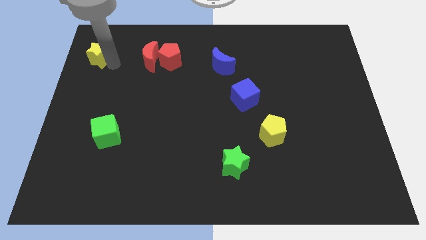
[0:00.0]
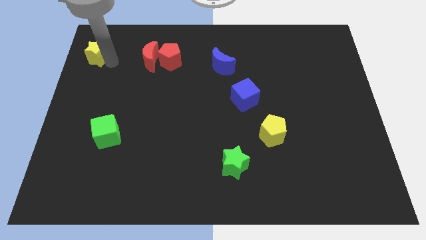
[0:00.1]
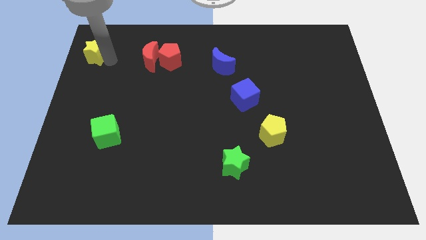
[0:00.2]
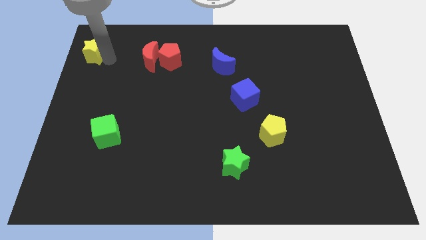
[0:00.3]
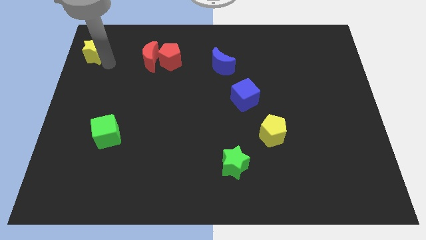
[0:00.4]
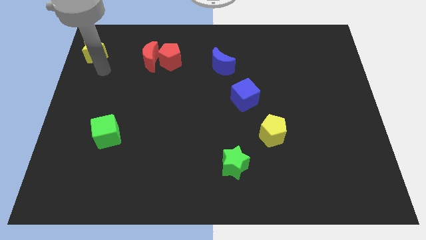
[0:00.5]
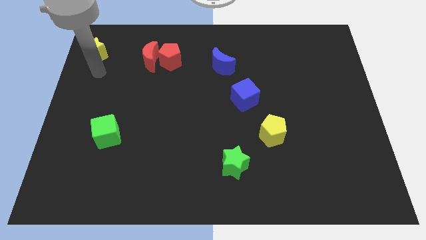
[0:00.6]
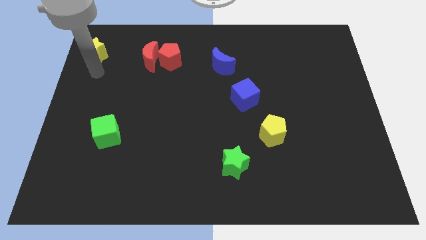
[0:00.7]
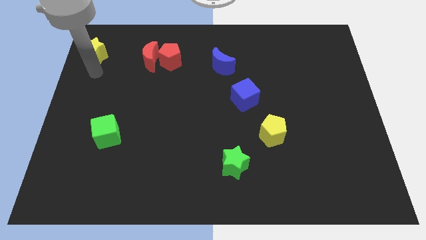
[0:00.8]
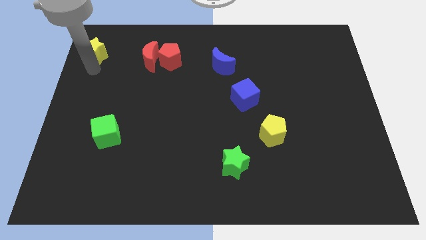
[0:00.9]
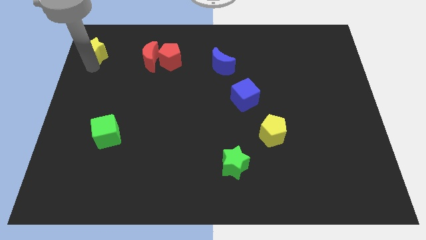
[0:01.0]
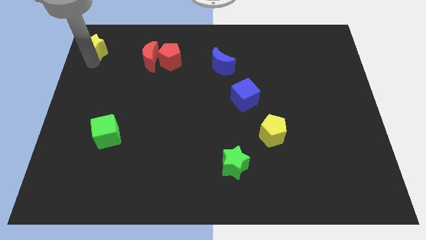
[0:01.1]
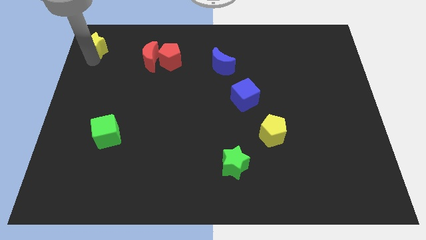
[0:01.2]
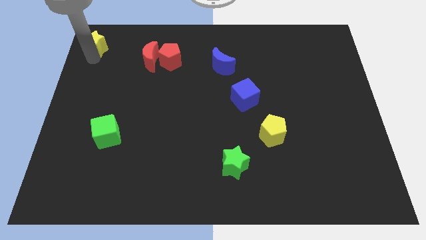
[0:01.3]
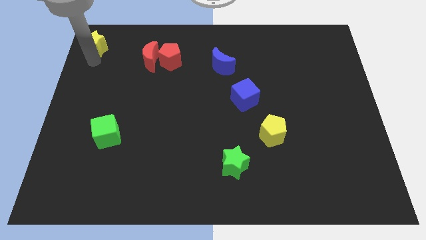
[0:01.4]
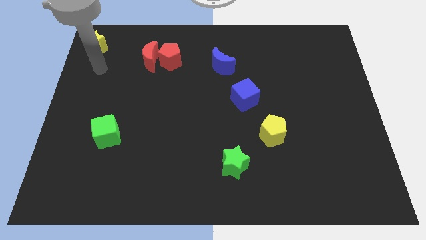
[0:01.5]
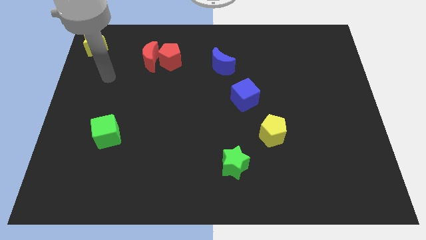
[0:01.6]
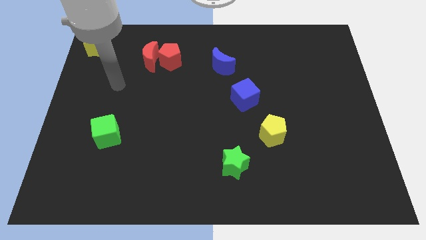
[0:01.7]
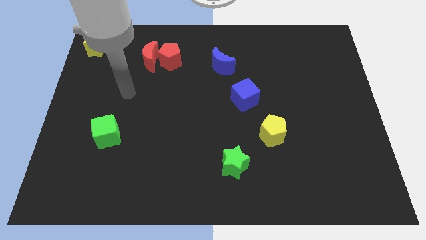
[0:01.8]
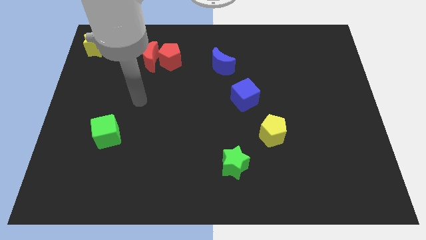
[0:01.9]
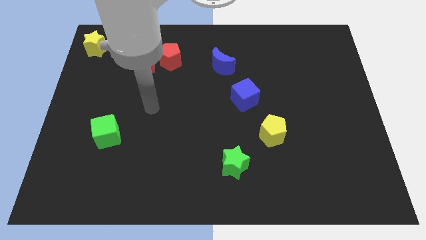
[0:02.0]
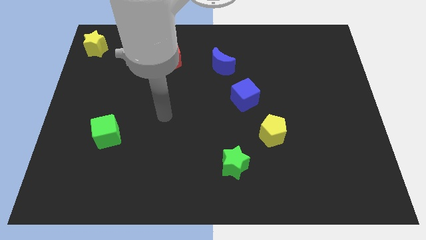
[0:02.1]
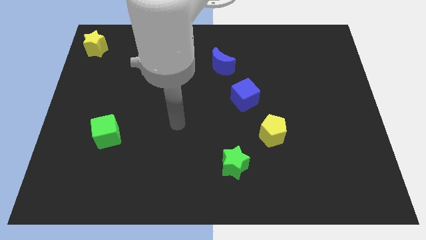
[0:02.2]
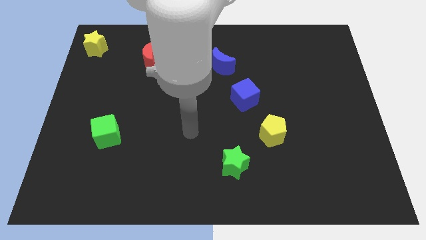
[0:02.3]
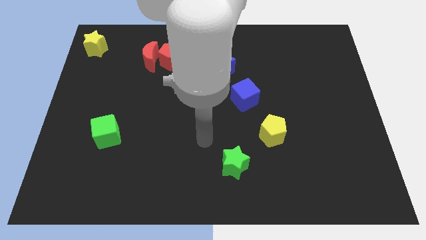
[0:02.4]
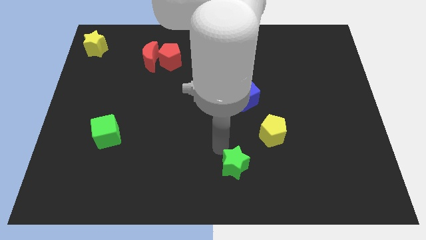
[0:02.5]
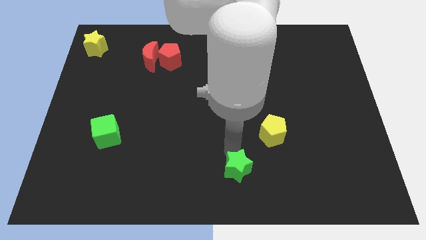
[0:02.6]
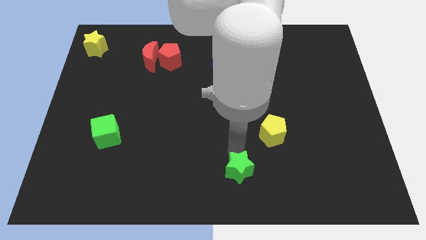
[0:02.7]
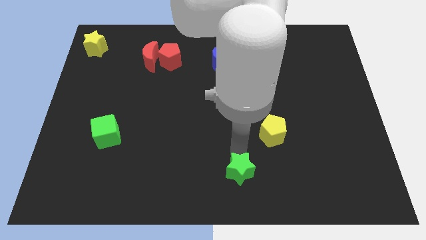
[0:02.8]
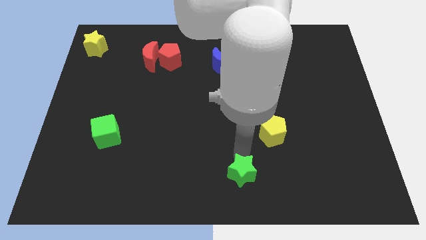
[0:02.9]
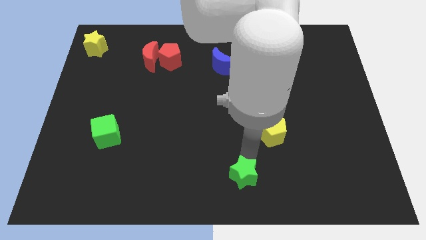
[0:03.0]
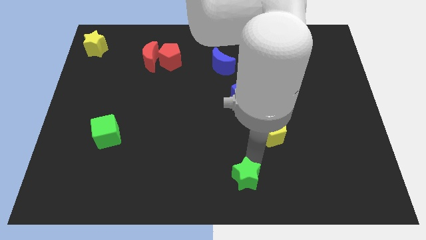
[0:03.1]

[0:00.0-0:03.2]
point your arm above green star

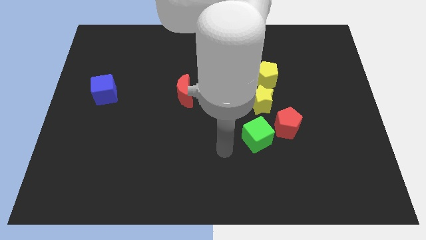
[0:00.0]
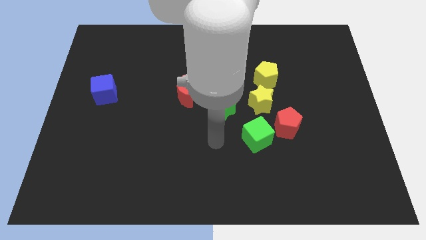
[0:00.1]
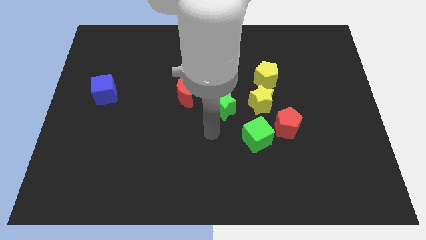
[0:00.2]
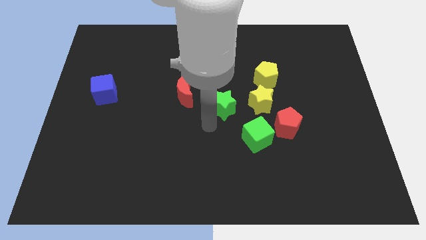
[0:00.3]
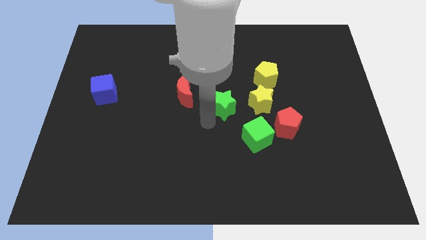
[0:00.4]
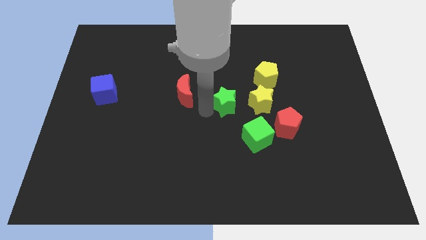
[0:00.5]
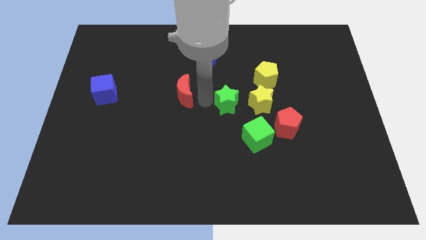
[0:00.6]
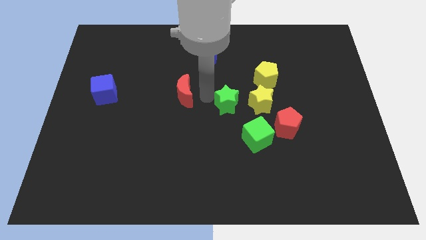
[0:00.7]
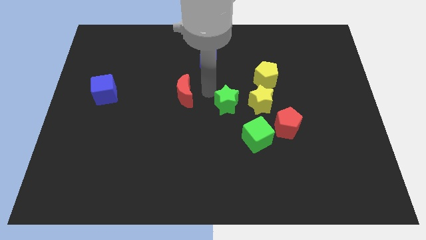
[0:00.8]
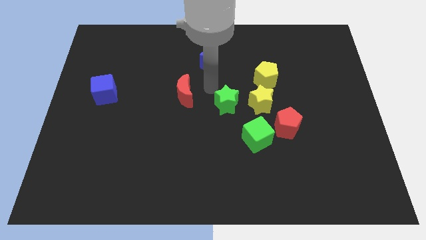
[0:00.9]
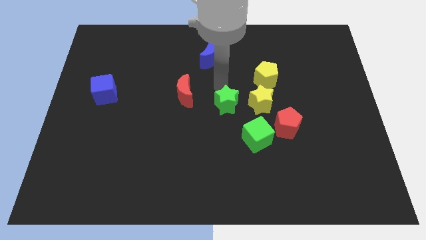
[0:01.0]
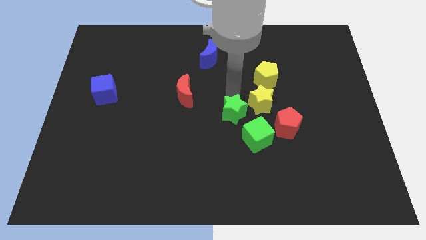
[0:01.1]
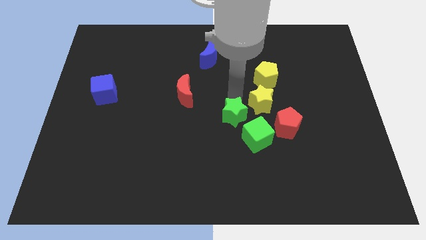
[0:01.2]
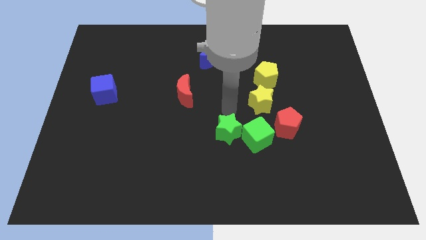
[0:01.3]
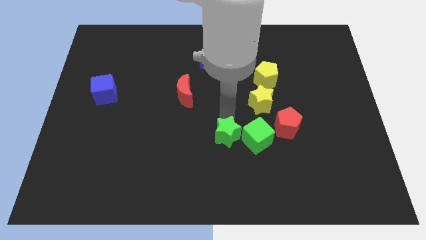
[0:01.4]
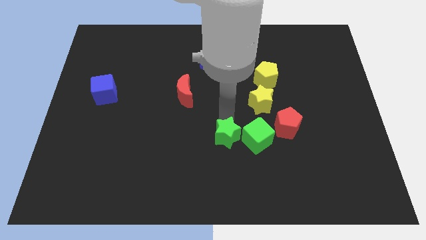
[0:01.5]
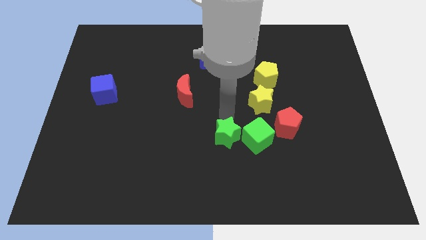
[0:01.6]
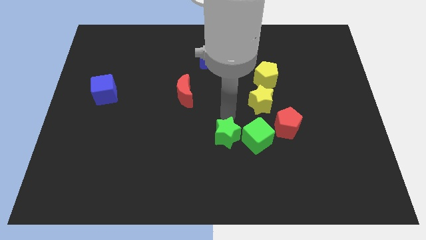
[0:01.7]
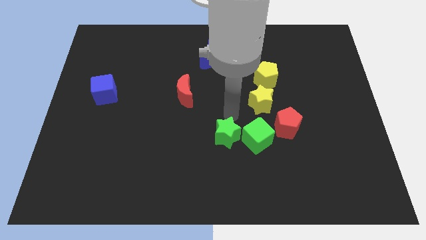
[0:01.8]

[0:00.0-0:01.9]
push green star into green cube

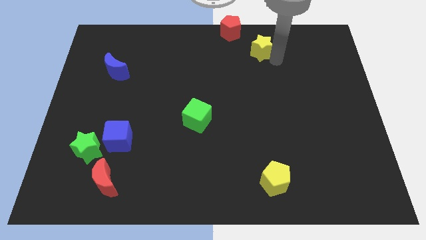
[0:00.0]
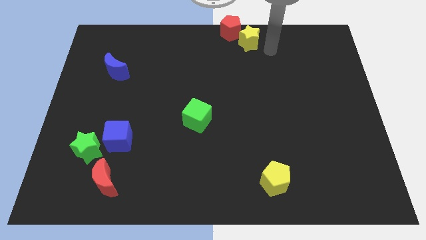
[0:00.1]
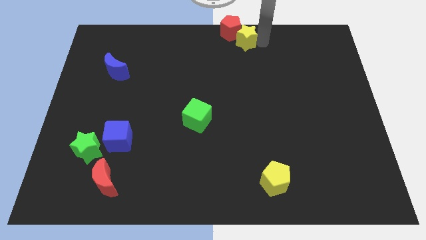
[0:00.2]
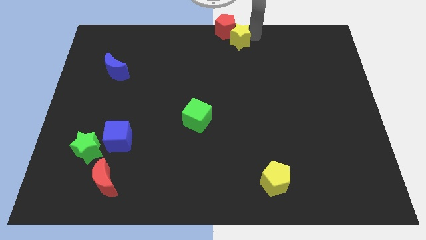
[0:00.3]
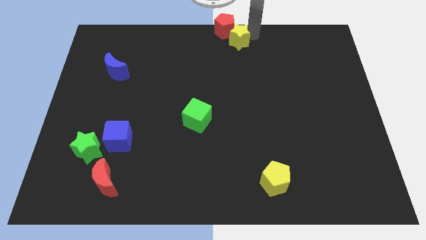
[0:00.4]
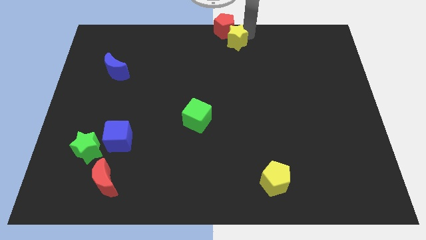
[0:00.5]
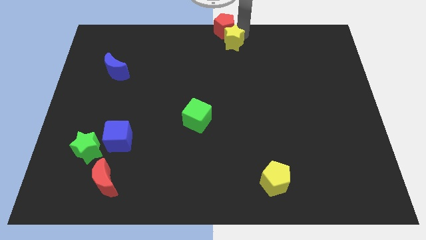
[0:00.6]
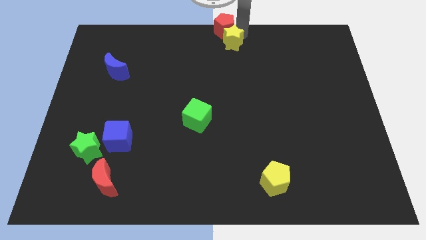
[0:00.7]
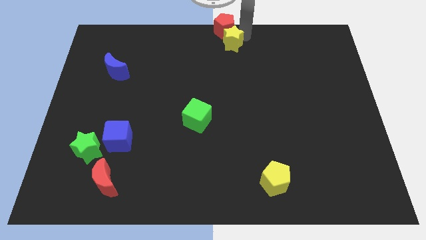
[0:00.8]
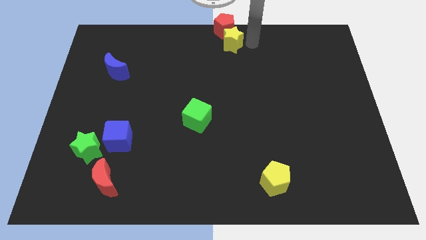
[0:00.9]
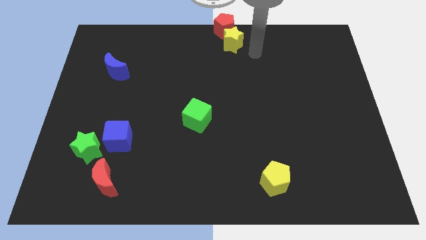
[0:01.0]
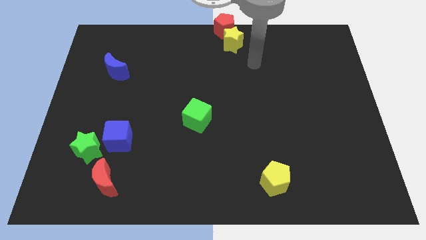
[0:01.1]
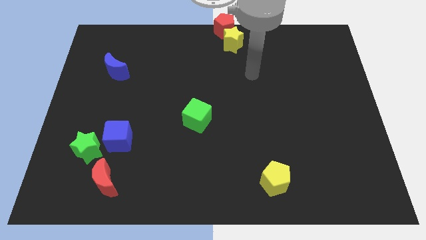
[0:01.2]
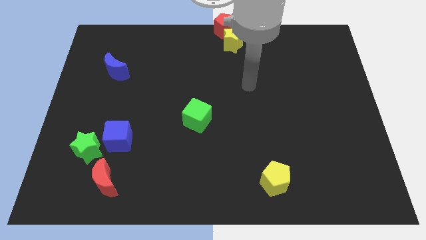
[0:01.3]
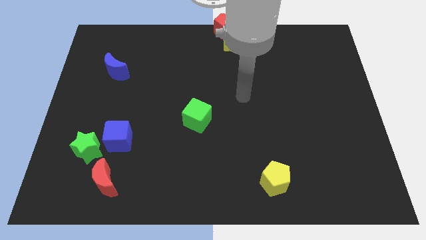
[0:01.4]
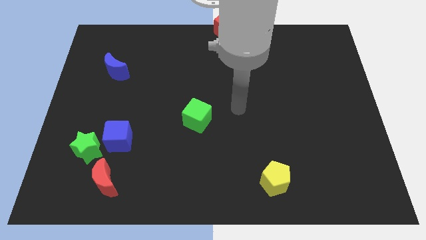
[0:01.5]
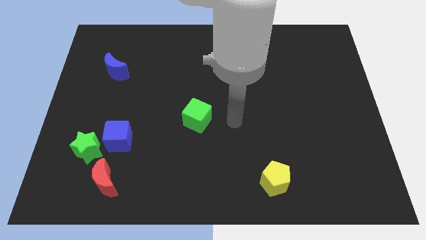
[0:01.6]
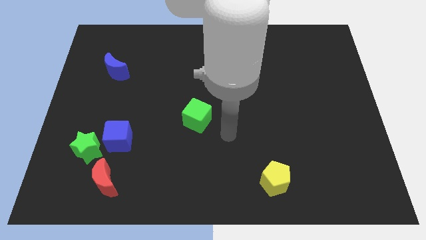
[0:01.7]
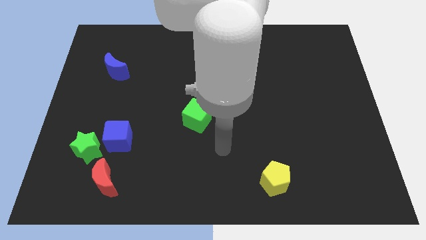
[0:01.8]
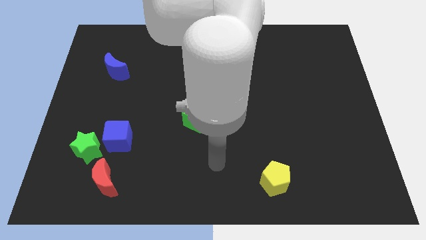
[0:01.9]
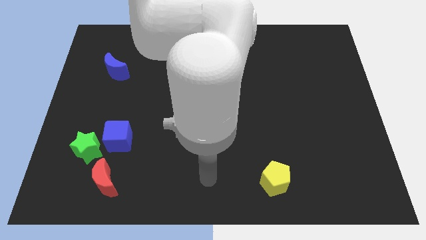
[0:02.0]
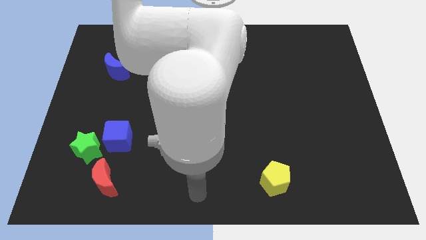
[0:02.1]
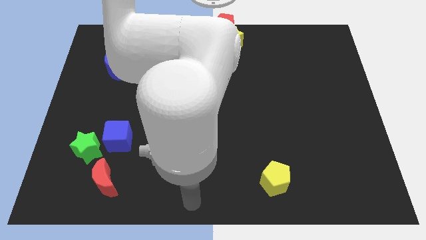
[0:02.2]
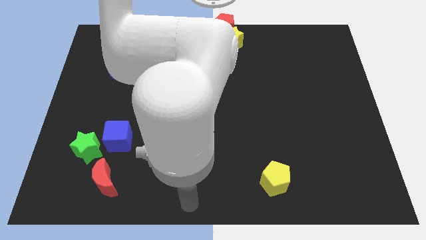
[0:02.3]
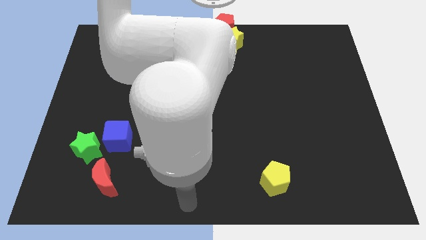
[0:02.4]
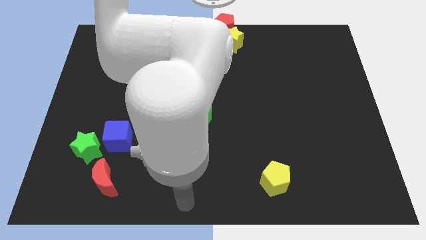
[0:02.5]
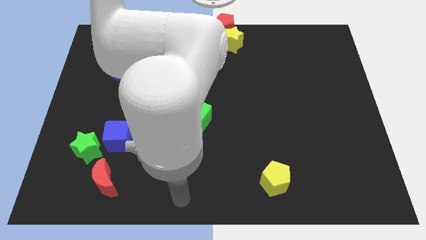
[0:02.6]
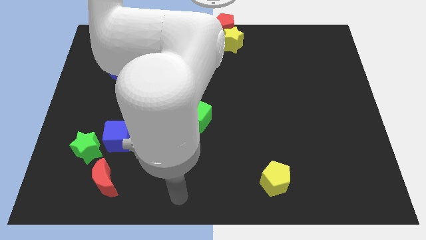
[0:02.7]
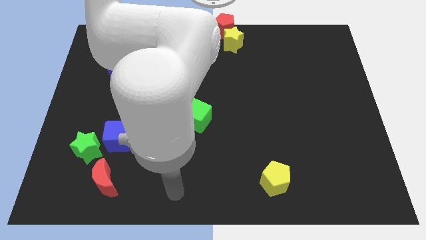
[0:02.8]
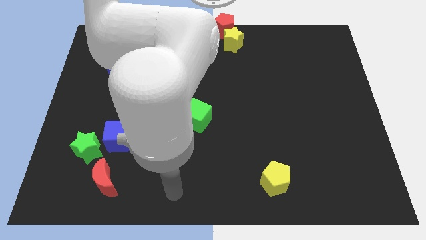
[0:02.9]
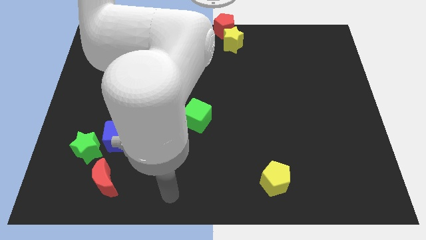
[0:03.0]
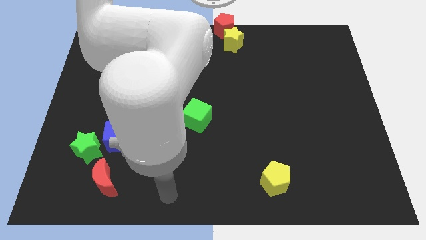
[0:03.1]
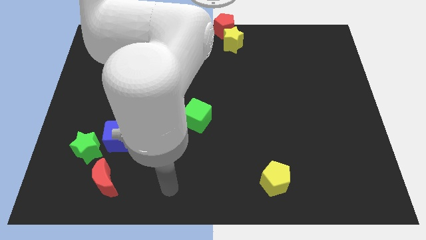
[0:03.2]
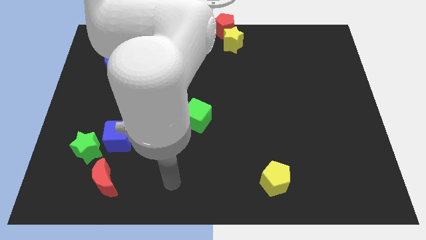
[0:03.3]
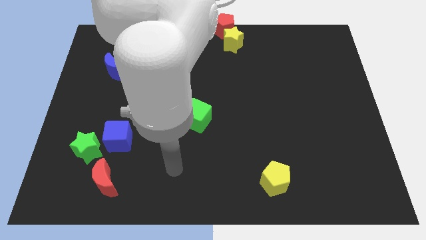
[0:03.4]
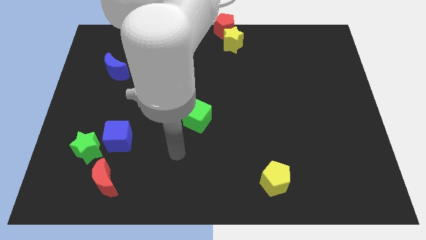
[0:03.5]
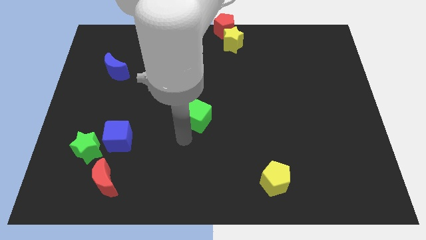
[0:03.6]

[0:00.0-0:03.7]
place the arm near the green cube

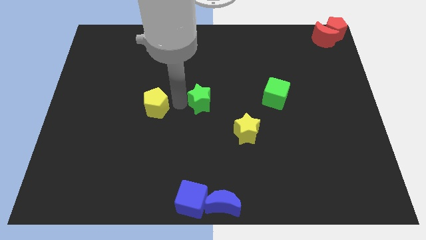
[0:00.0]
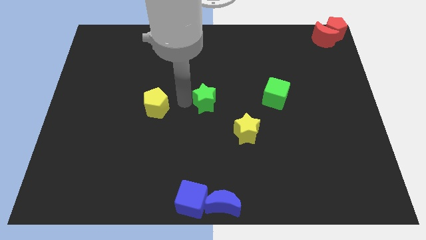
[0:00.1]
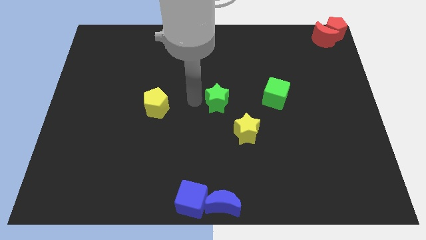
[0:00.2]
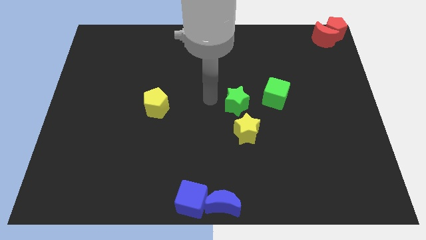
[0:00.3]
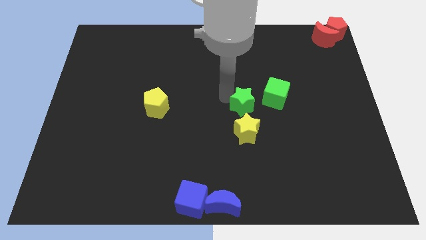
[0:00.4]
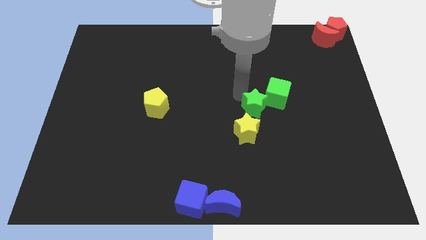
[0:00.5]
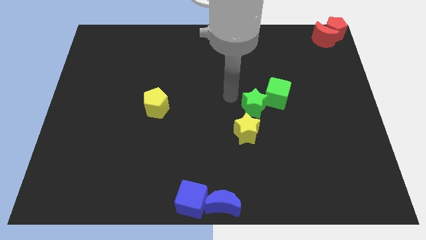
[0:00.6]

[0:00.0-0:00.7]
place the green star above the yellow star
